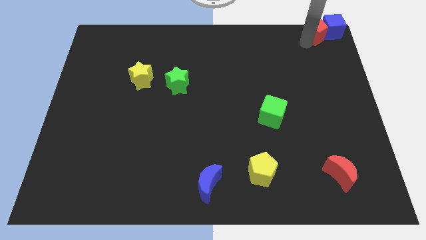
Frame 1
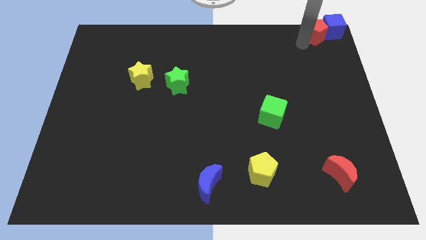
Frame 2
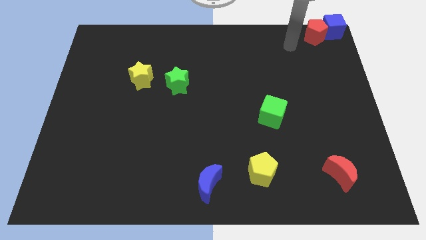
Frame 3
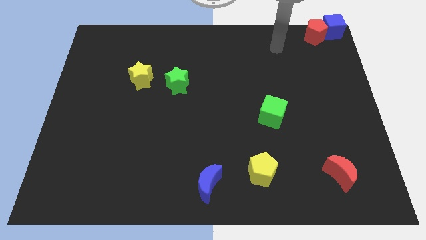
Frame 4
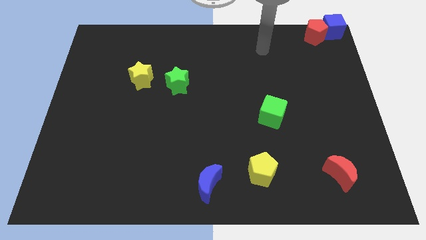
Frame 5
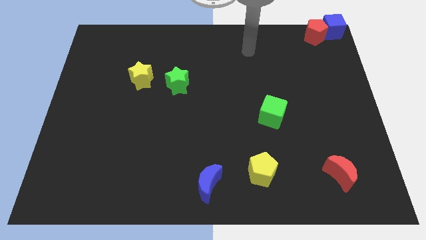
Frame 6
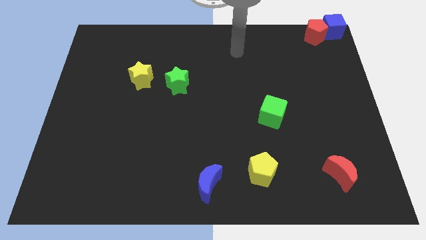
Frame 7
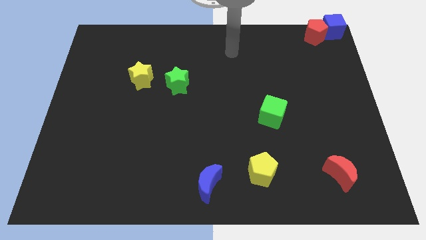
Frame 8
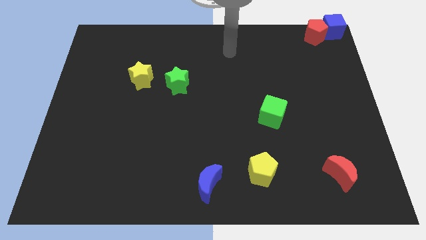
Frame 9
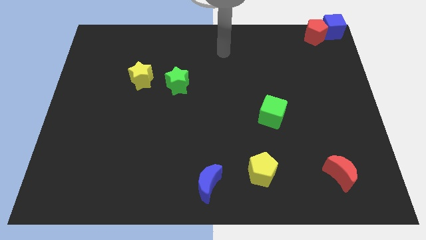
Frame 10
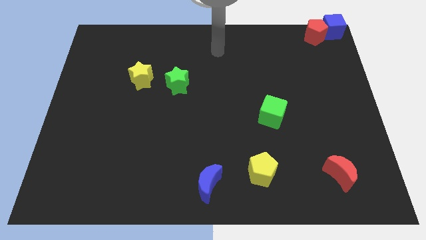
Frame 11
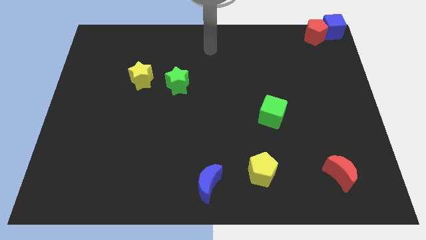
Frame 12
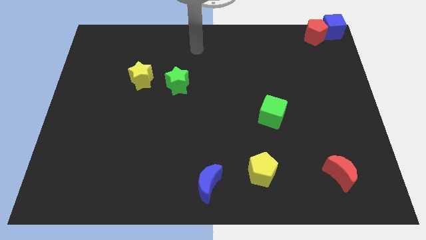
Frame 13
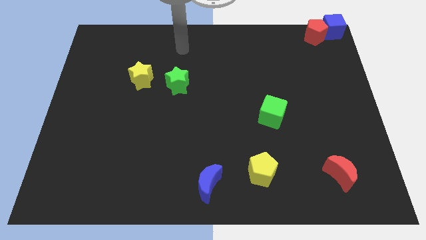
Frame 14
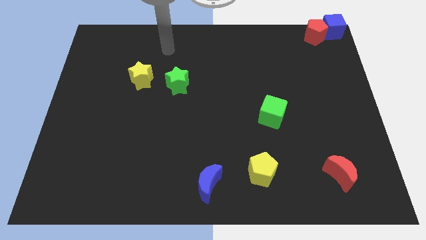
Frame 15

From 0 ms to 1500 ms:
move your arm to the top of green star

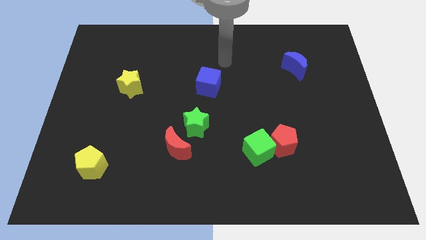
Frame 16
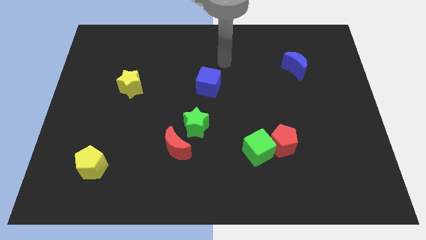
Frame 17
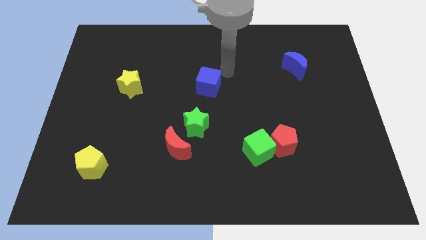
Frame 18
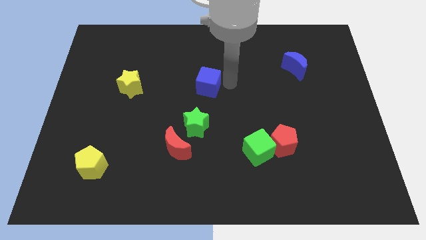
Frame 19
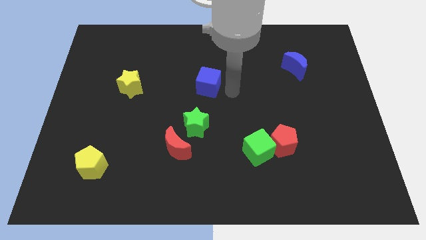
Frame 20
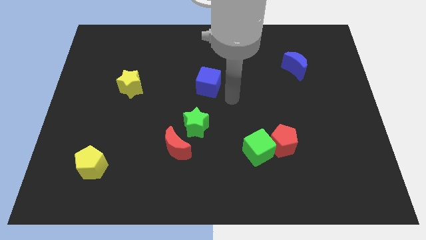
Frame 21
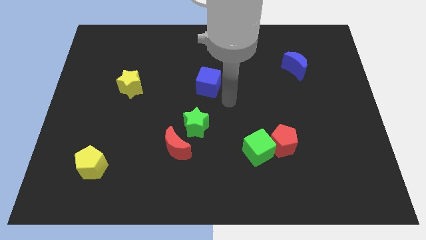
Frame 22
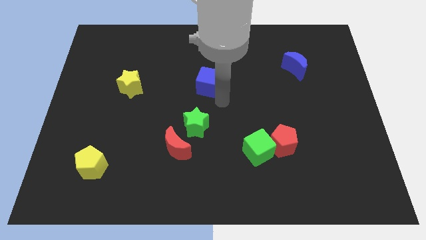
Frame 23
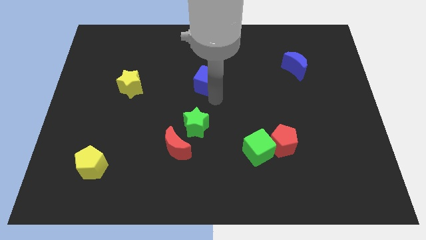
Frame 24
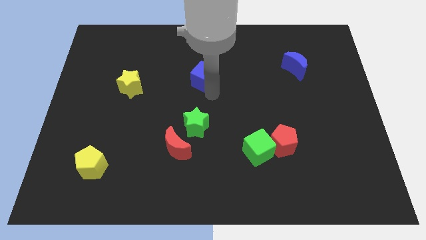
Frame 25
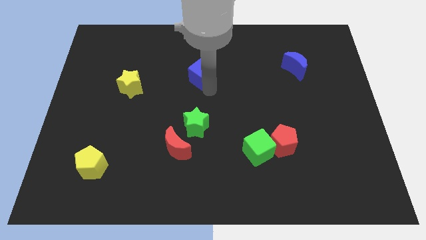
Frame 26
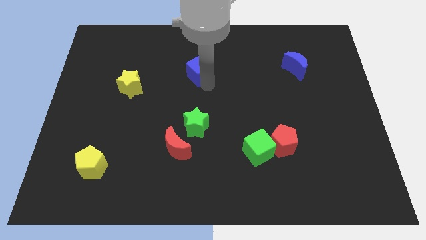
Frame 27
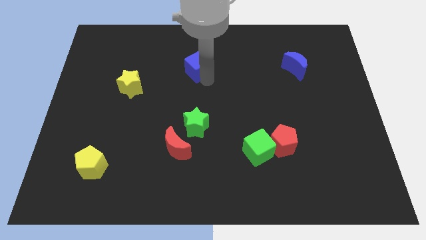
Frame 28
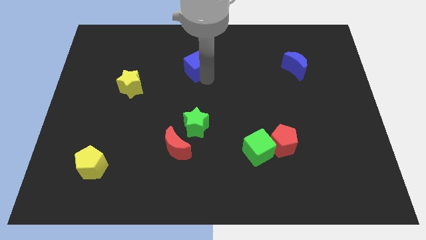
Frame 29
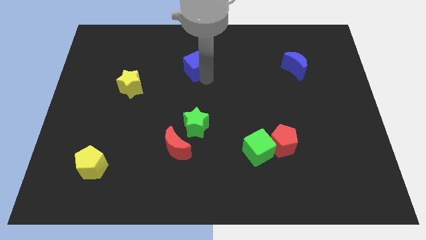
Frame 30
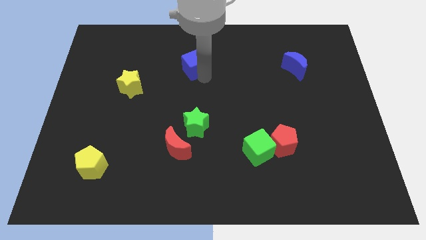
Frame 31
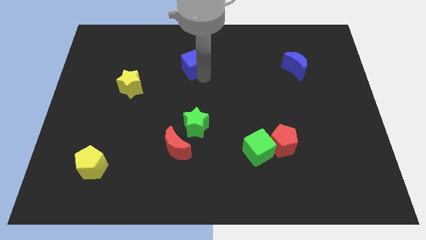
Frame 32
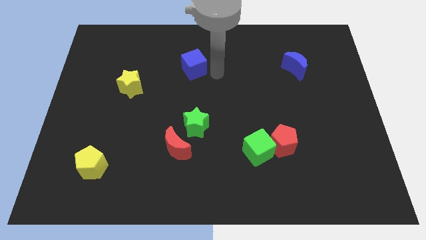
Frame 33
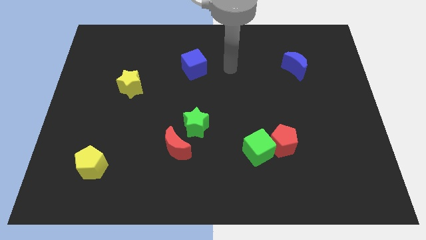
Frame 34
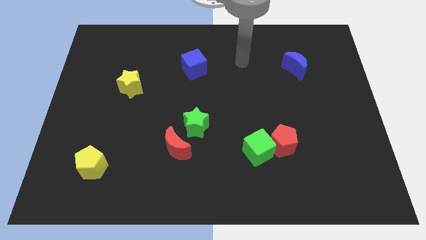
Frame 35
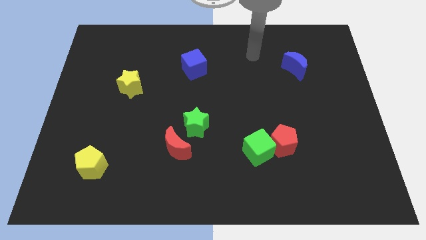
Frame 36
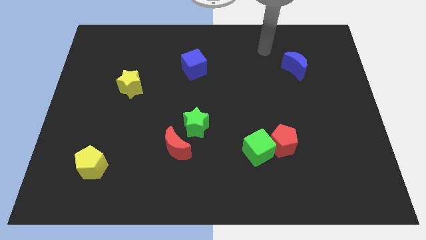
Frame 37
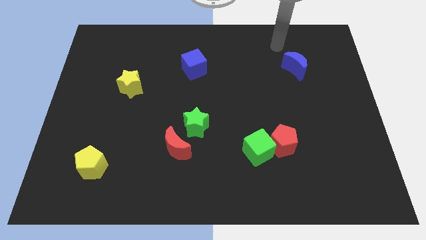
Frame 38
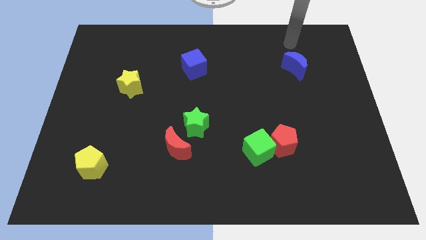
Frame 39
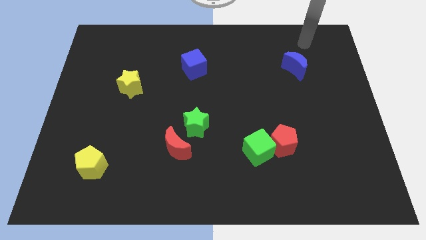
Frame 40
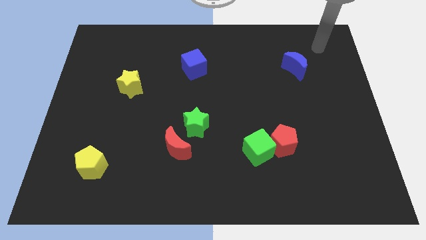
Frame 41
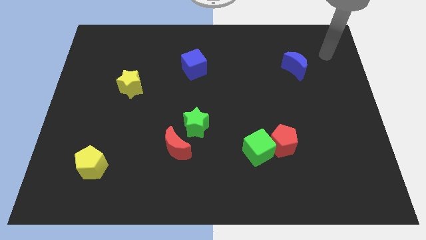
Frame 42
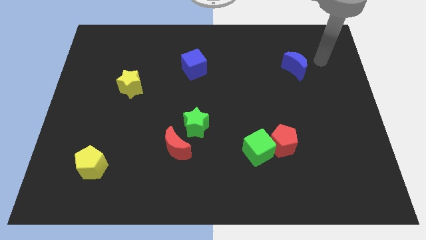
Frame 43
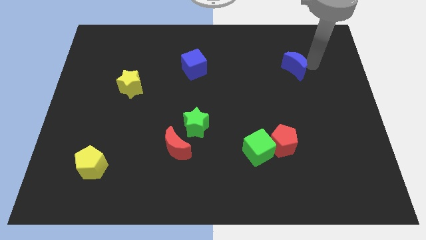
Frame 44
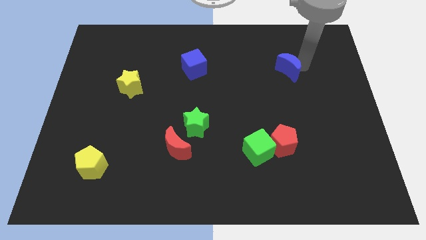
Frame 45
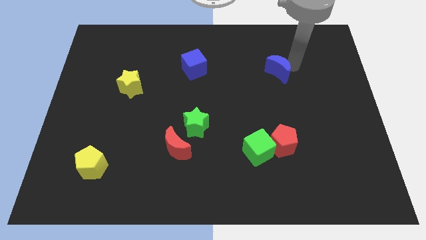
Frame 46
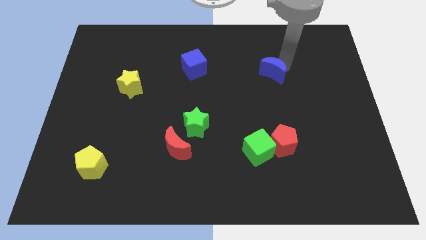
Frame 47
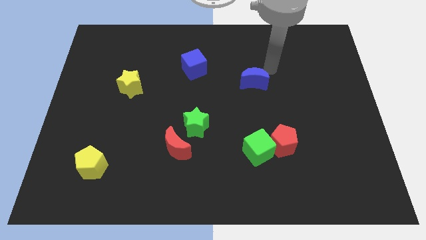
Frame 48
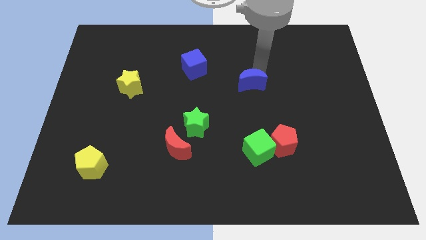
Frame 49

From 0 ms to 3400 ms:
place the blue moon above the green cube

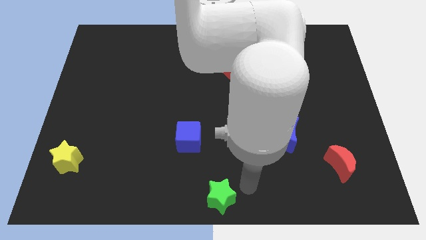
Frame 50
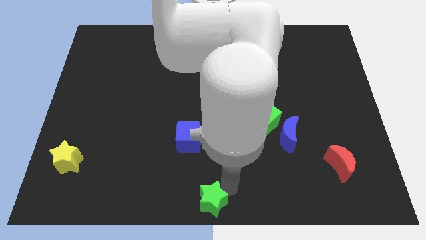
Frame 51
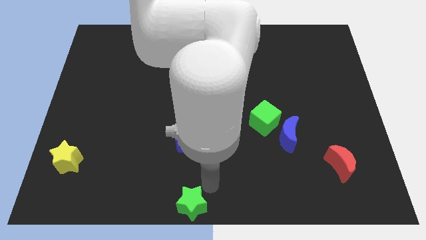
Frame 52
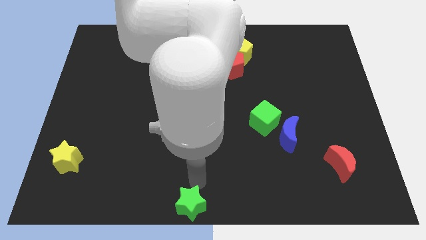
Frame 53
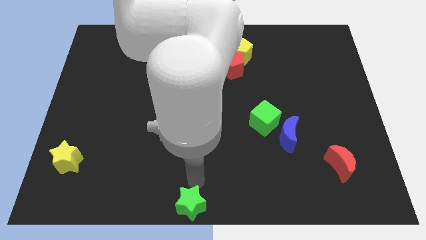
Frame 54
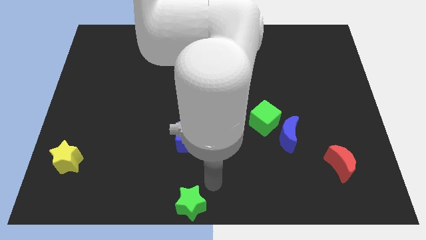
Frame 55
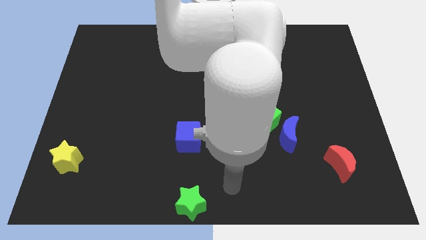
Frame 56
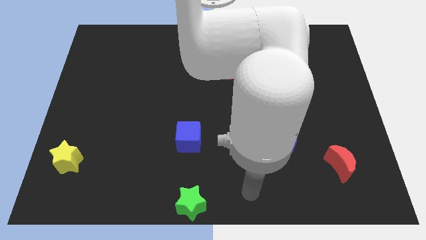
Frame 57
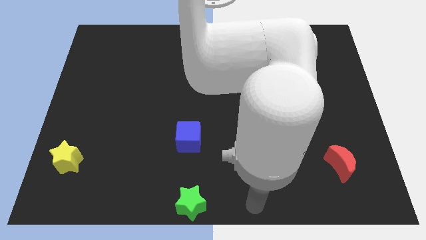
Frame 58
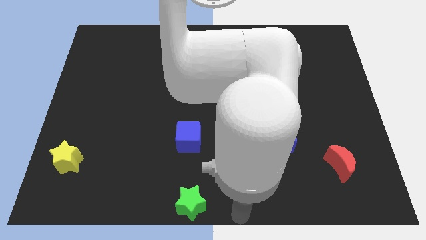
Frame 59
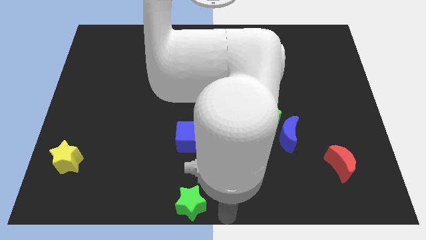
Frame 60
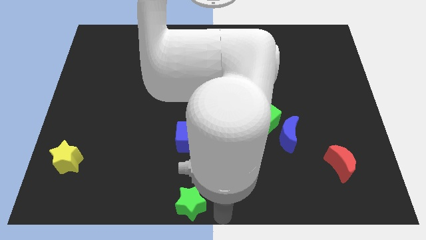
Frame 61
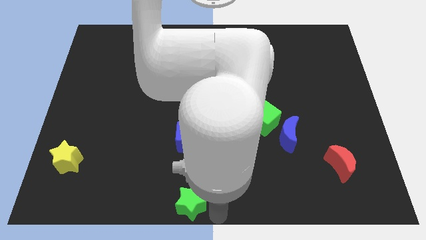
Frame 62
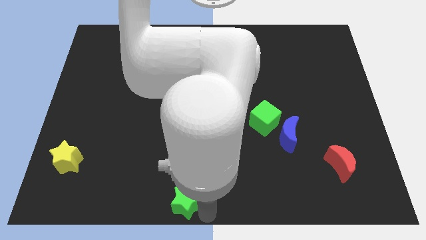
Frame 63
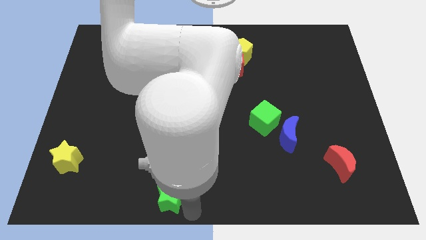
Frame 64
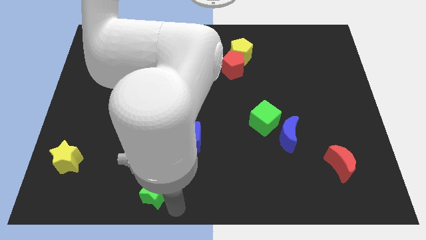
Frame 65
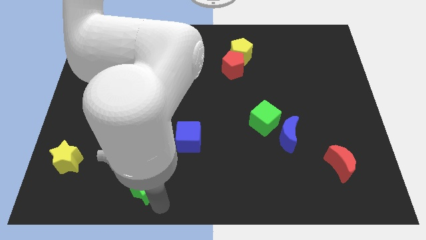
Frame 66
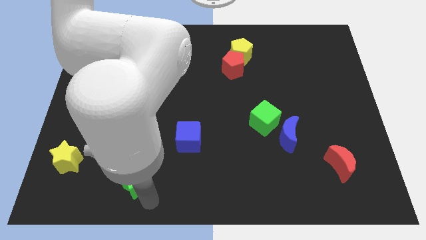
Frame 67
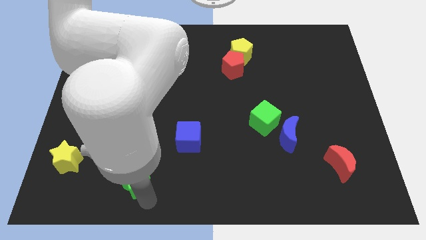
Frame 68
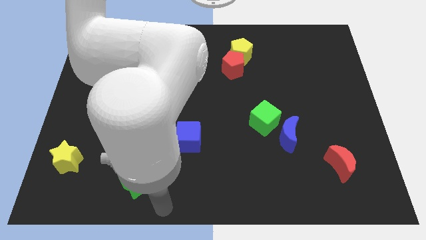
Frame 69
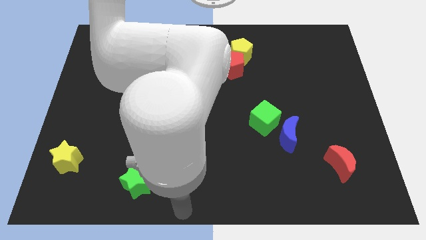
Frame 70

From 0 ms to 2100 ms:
move the green star diagonally to the bottom left the blue cube

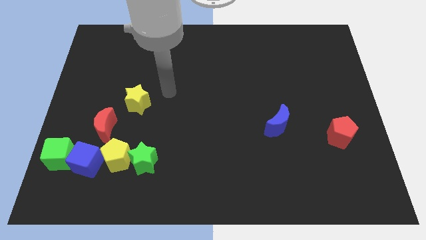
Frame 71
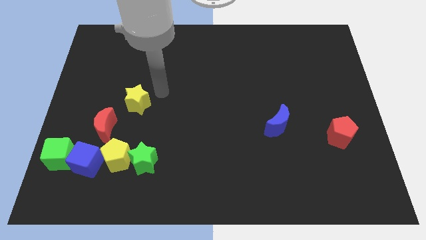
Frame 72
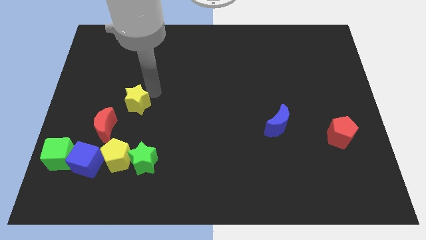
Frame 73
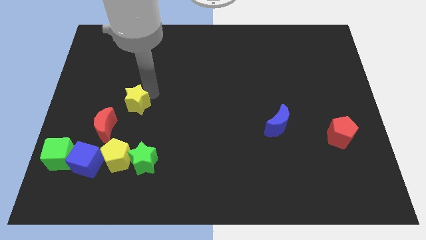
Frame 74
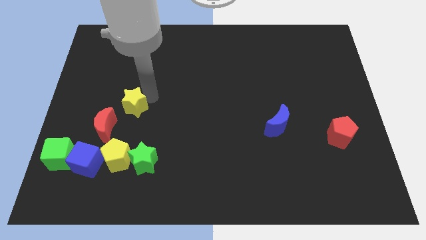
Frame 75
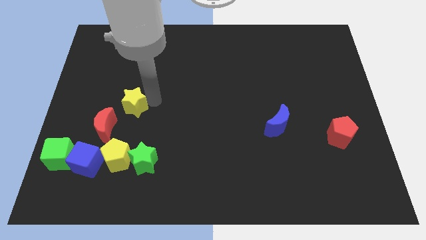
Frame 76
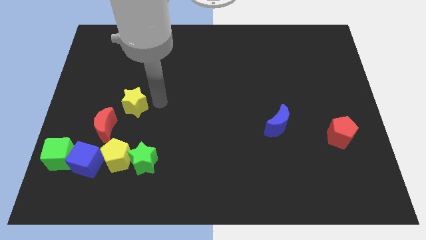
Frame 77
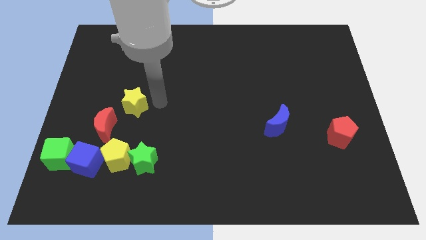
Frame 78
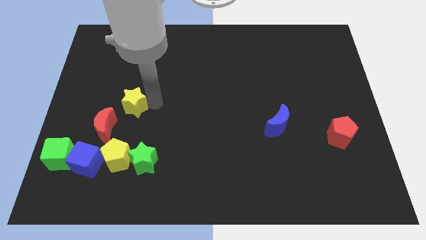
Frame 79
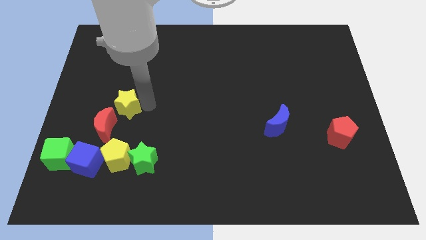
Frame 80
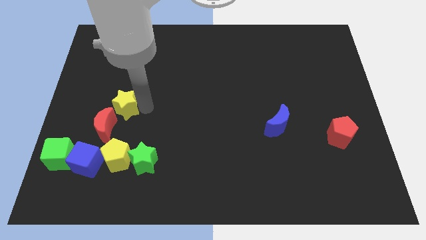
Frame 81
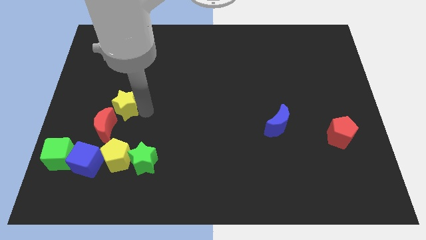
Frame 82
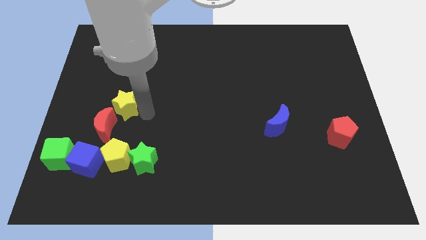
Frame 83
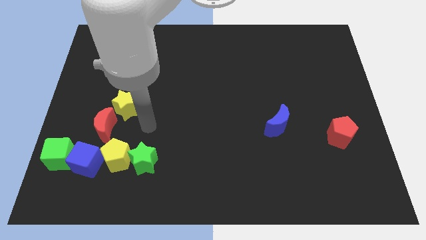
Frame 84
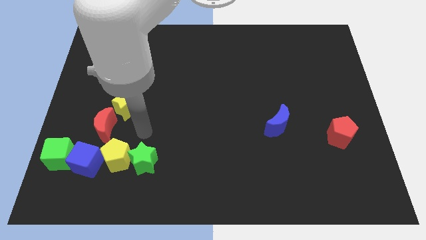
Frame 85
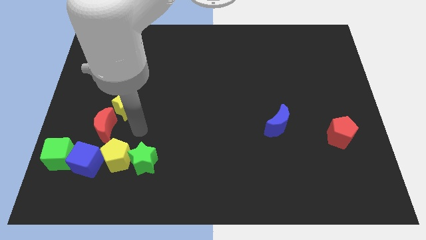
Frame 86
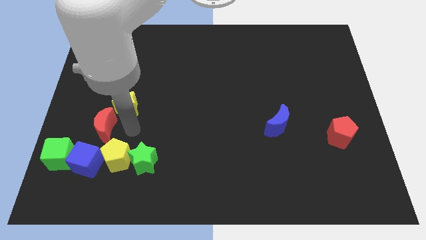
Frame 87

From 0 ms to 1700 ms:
push yellow star close to the red moon

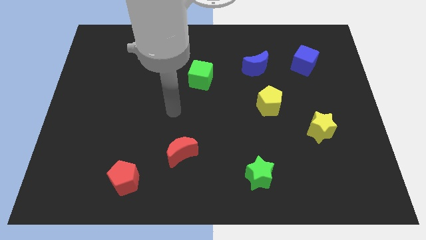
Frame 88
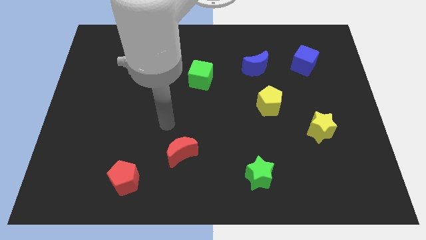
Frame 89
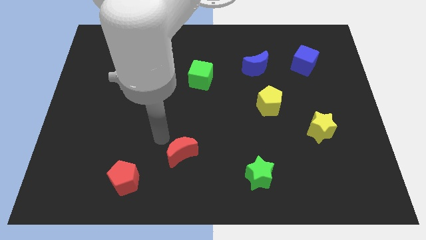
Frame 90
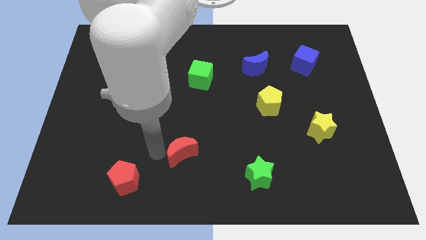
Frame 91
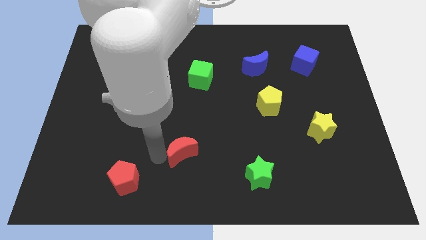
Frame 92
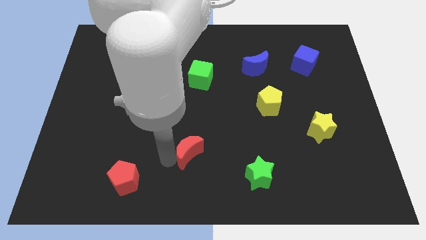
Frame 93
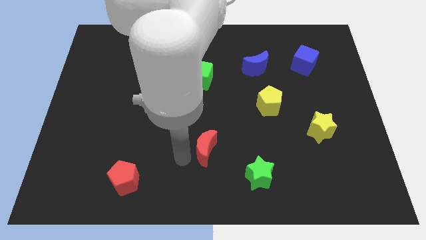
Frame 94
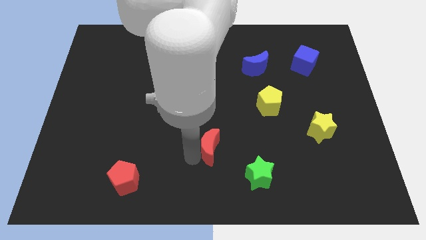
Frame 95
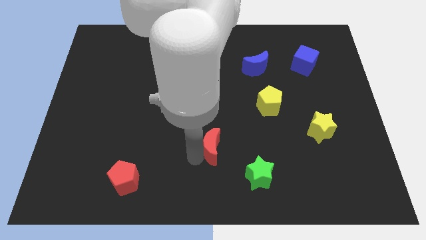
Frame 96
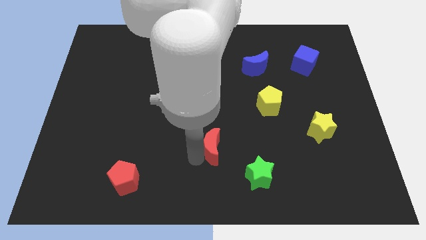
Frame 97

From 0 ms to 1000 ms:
push the red crescent towards the green star
